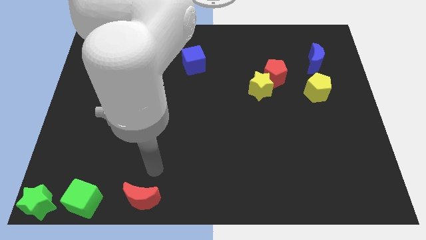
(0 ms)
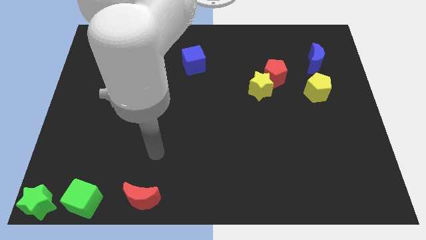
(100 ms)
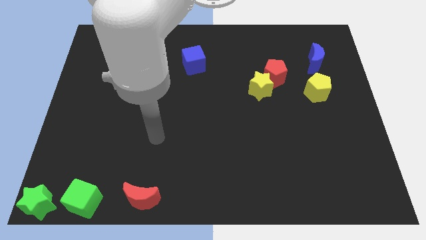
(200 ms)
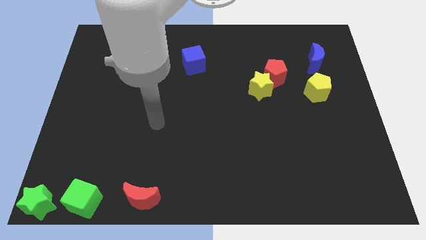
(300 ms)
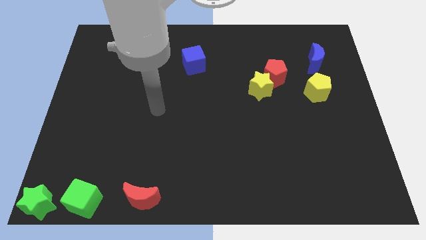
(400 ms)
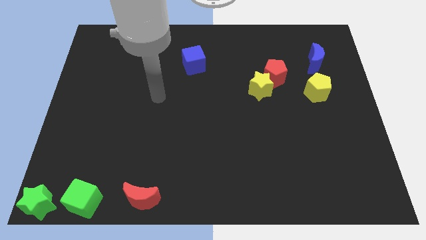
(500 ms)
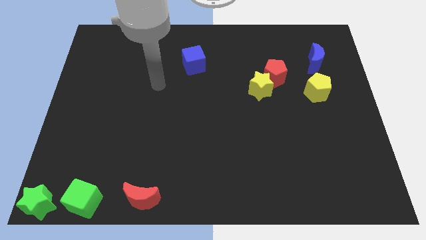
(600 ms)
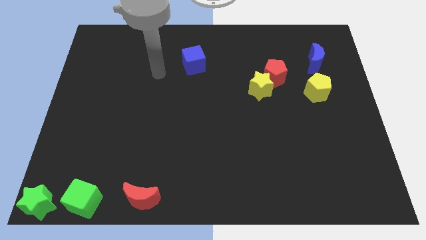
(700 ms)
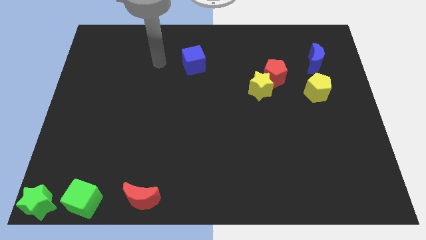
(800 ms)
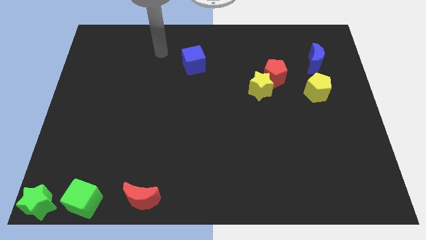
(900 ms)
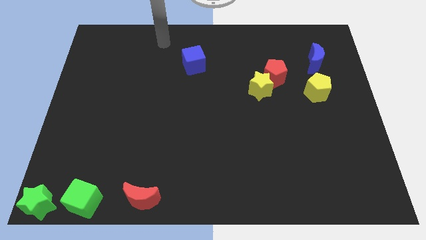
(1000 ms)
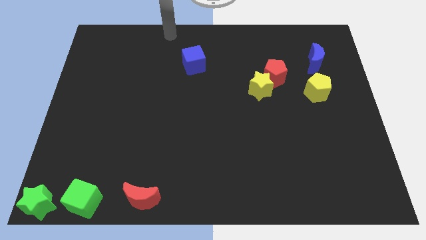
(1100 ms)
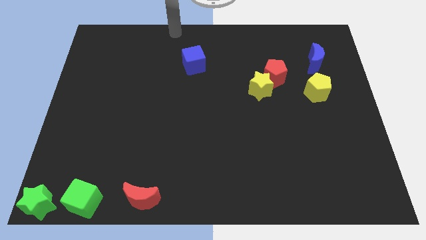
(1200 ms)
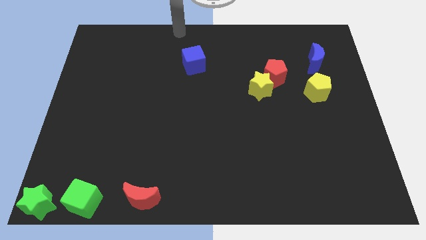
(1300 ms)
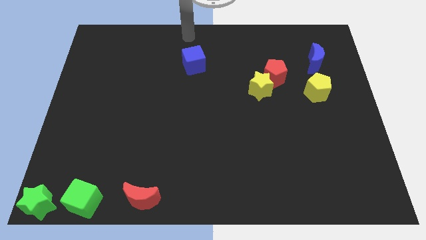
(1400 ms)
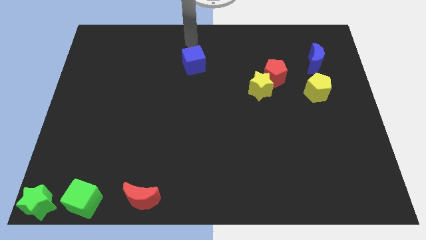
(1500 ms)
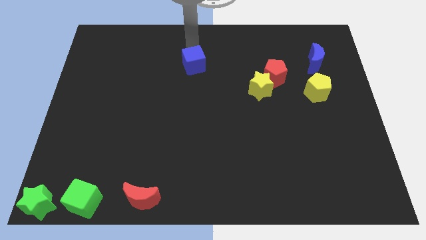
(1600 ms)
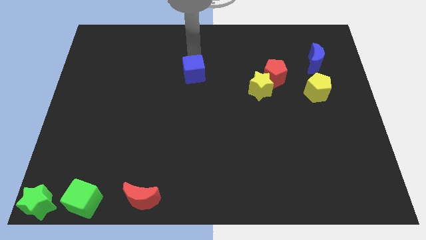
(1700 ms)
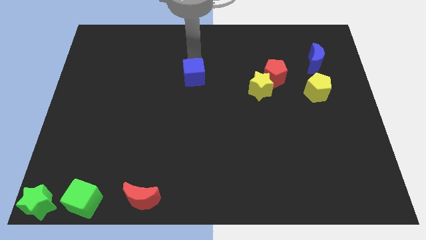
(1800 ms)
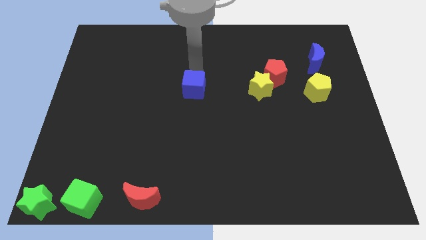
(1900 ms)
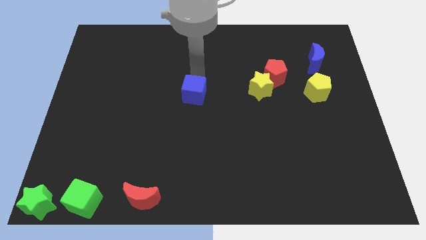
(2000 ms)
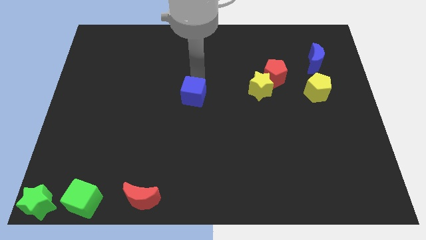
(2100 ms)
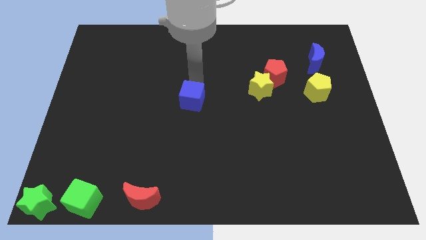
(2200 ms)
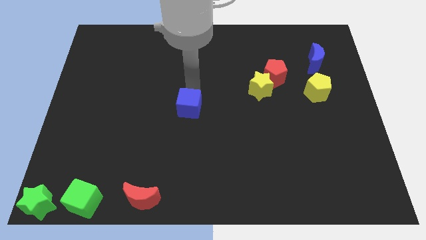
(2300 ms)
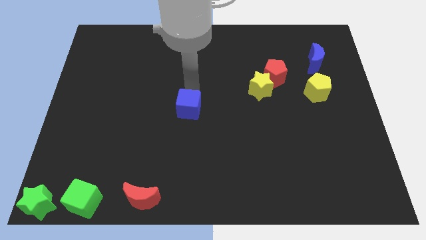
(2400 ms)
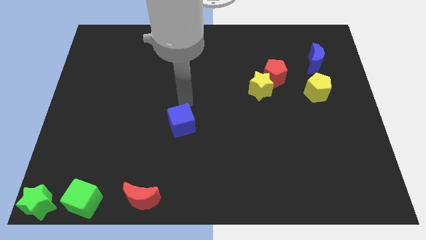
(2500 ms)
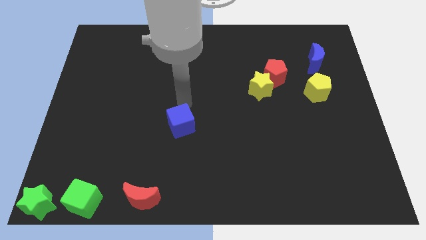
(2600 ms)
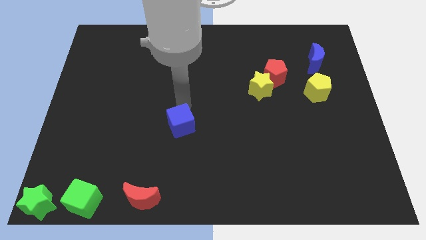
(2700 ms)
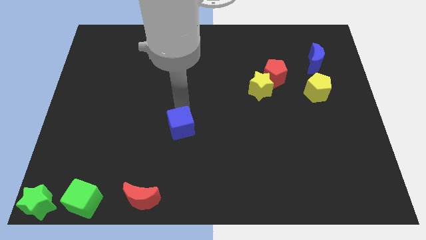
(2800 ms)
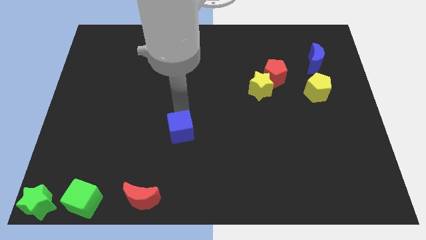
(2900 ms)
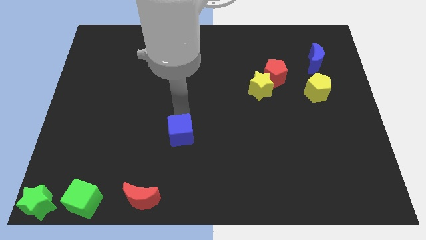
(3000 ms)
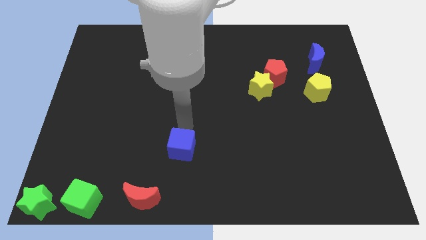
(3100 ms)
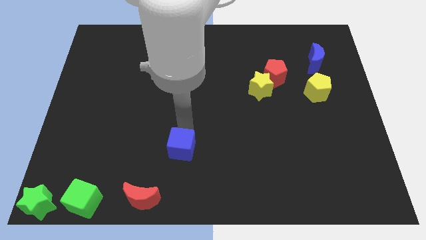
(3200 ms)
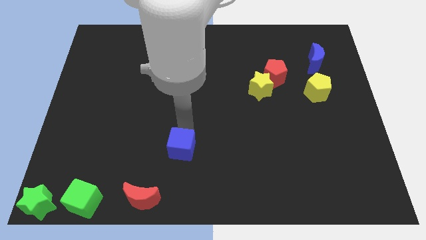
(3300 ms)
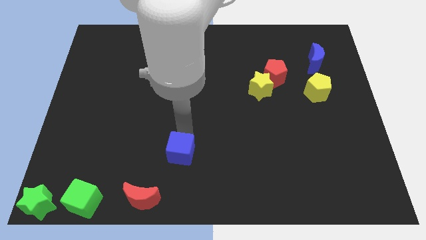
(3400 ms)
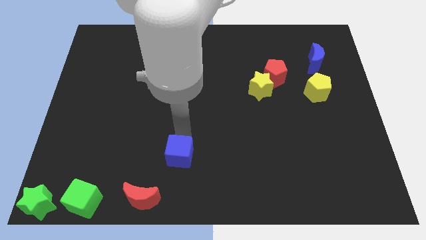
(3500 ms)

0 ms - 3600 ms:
drag the blue cube towards the top side of the red moon

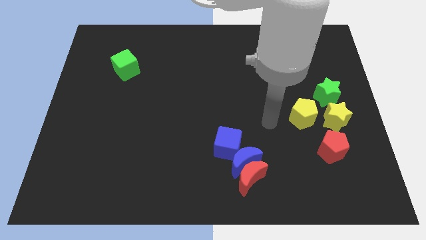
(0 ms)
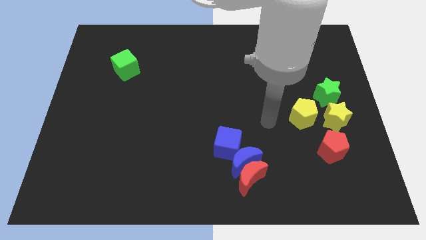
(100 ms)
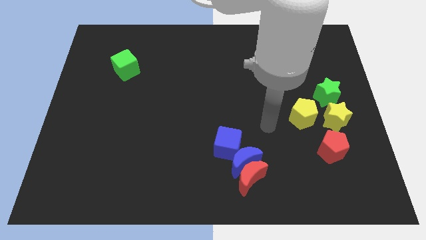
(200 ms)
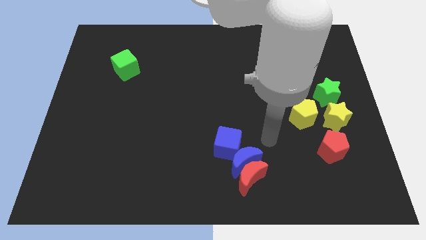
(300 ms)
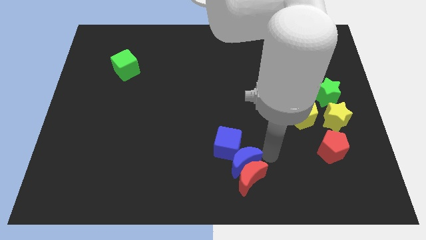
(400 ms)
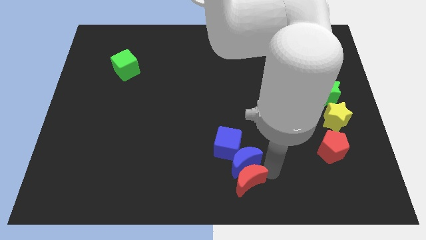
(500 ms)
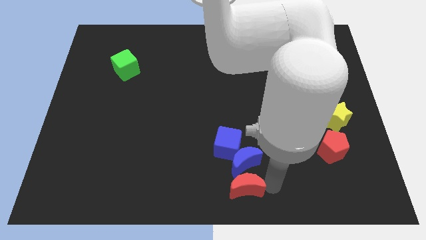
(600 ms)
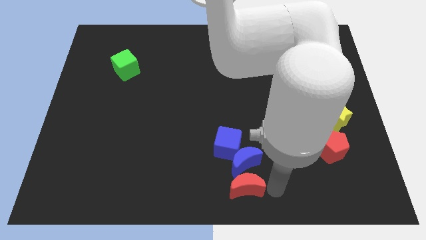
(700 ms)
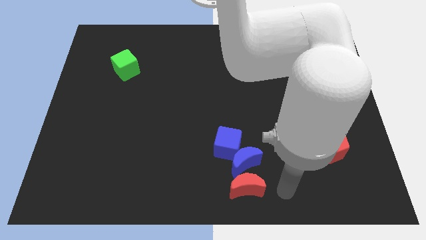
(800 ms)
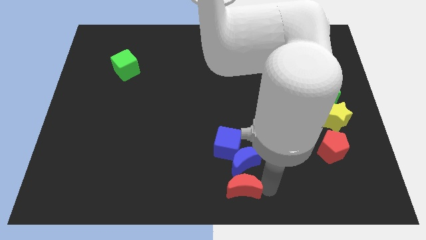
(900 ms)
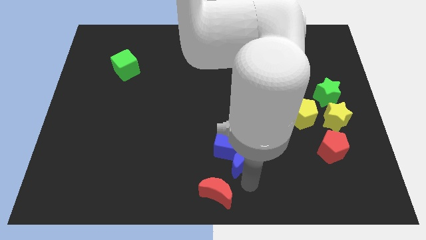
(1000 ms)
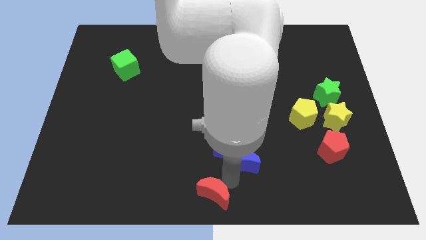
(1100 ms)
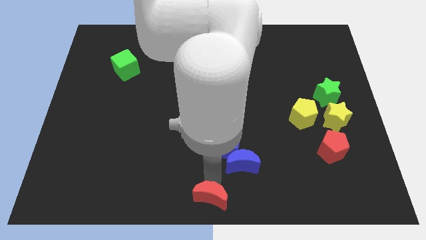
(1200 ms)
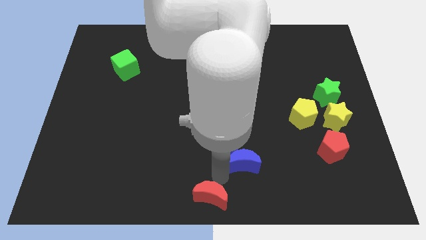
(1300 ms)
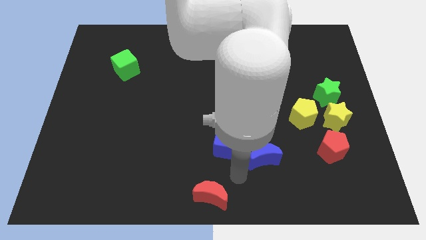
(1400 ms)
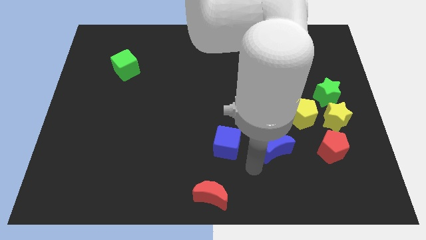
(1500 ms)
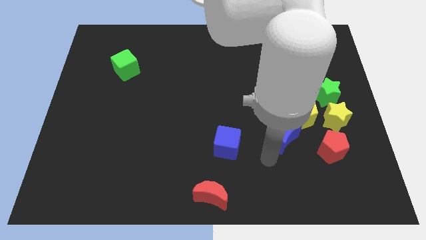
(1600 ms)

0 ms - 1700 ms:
separate red moon and the blue moon

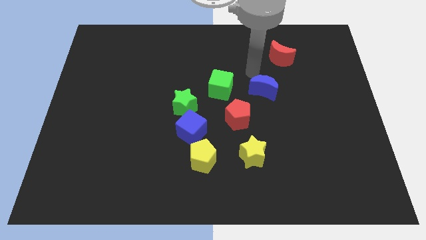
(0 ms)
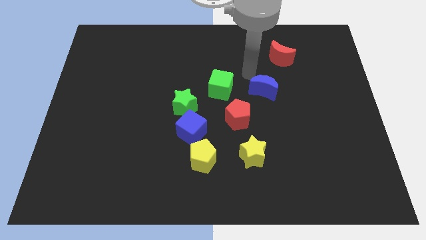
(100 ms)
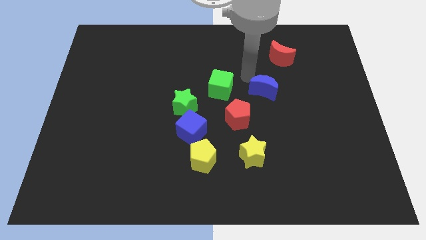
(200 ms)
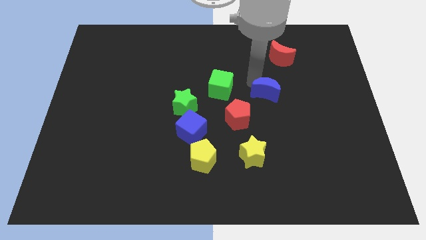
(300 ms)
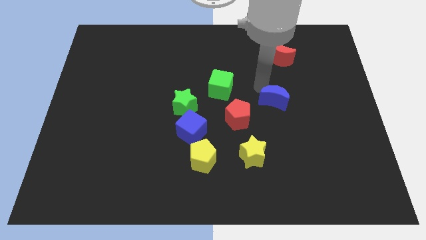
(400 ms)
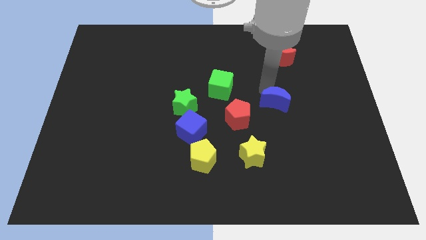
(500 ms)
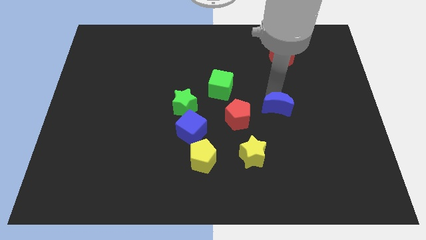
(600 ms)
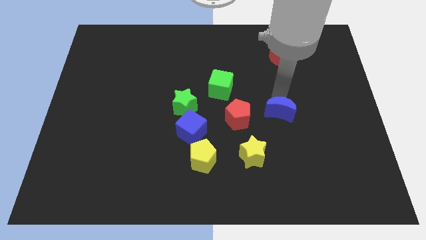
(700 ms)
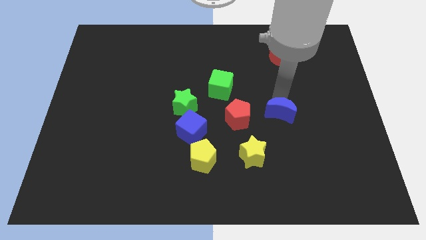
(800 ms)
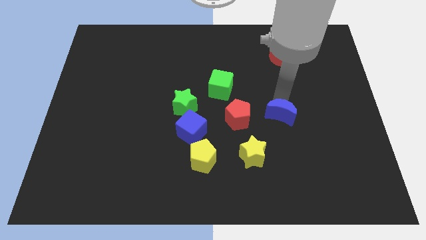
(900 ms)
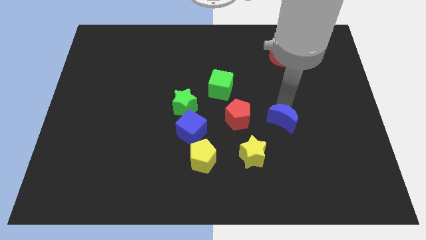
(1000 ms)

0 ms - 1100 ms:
place the blue crescent right to the red pentagon

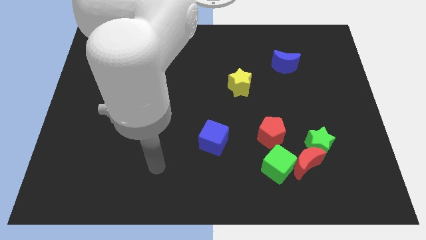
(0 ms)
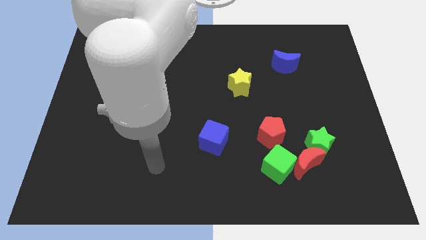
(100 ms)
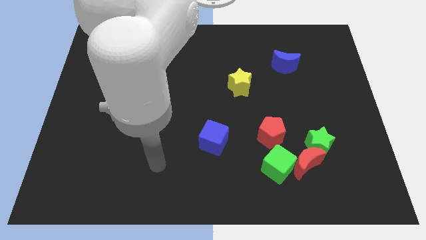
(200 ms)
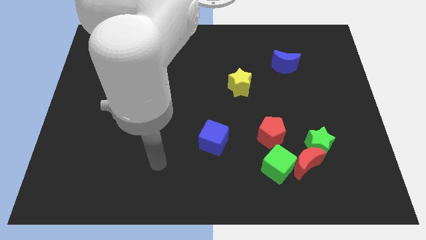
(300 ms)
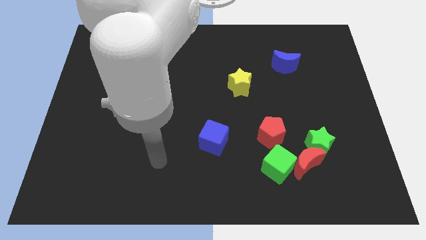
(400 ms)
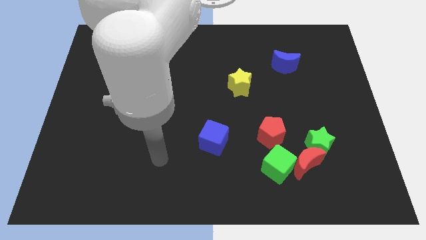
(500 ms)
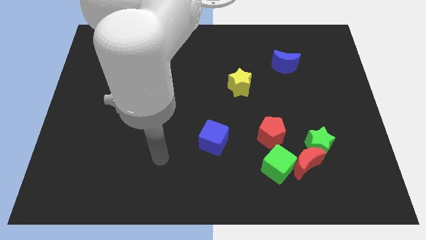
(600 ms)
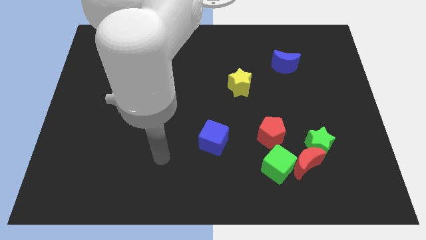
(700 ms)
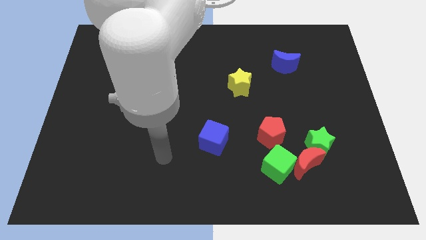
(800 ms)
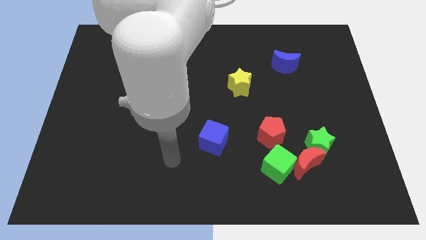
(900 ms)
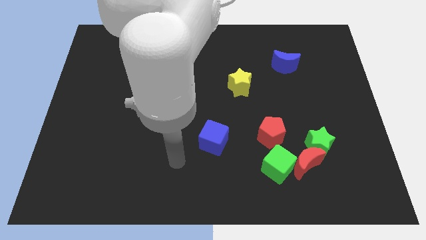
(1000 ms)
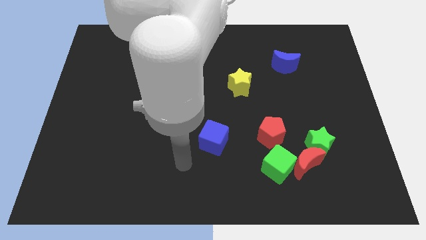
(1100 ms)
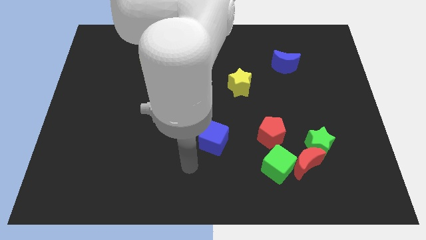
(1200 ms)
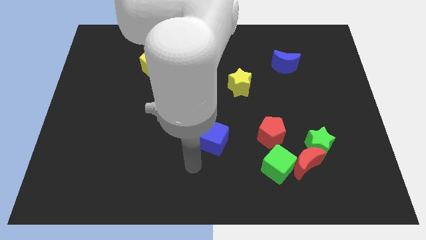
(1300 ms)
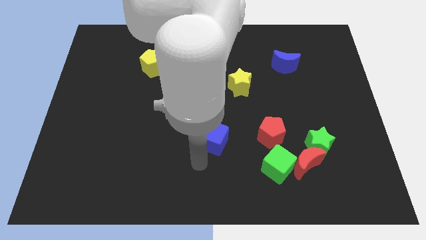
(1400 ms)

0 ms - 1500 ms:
move your hand towards the blue cube

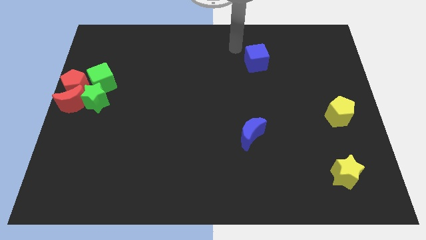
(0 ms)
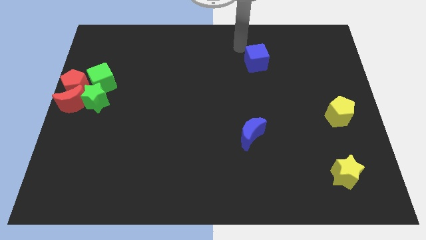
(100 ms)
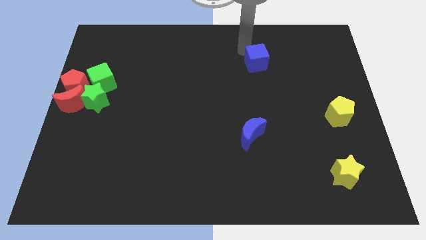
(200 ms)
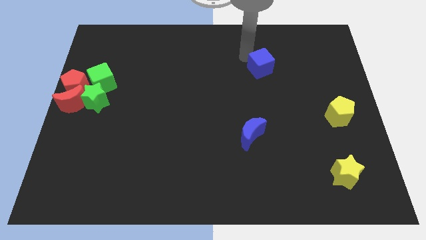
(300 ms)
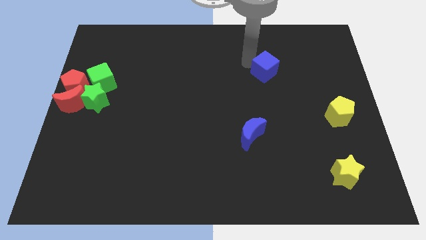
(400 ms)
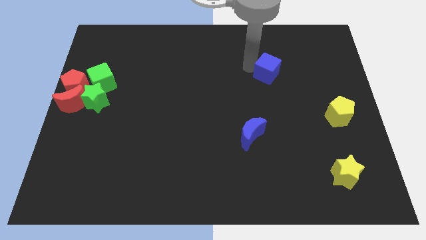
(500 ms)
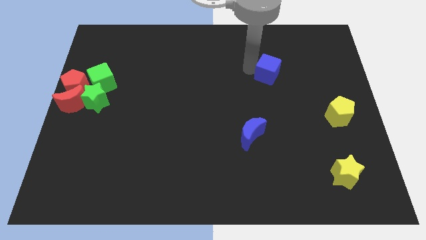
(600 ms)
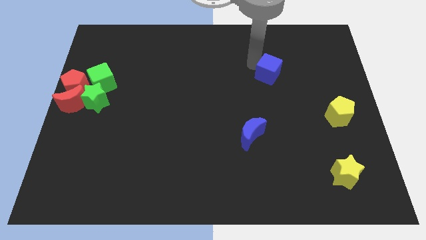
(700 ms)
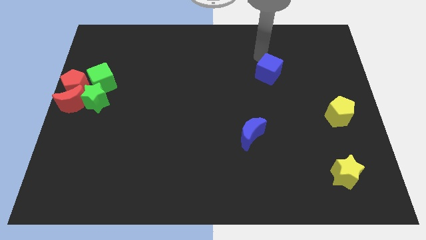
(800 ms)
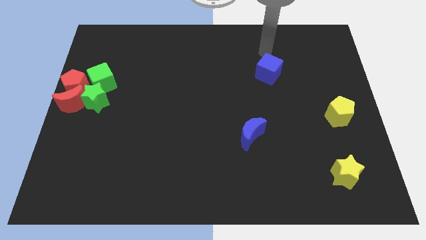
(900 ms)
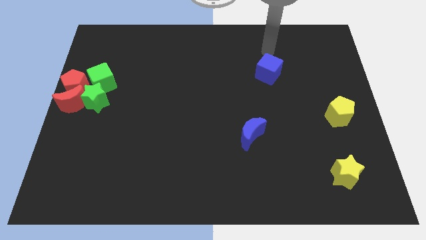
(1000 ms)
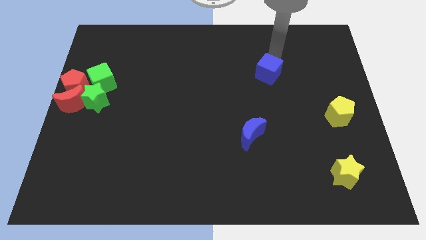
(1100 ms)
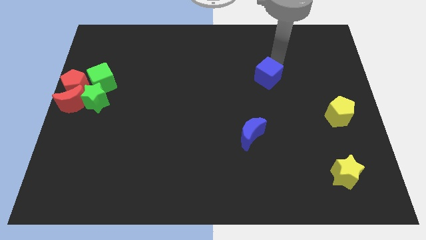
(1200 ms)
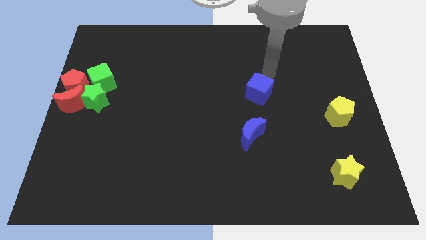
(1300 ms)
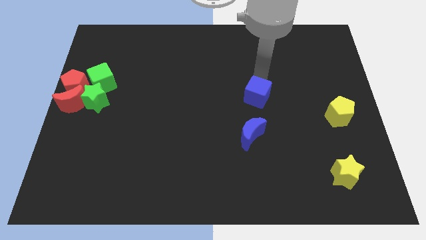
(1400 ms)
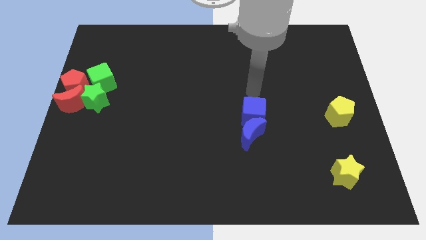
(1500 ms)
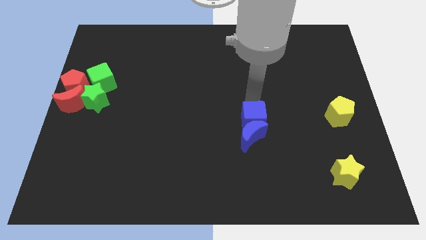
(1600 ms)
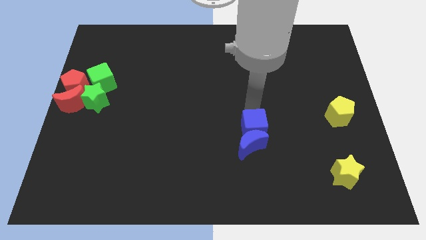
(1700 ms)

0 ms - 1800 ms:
place the blue cube above the blue moon
